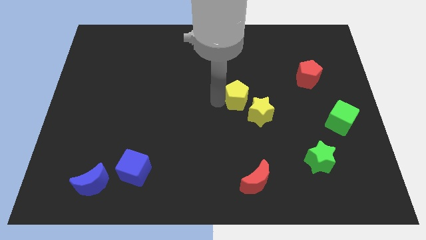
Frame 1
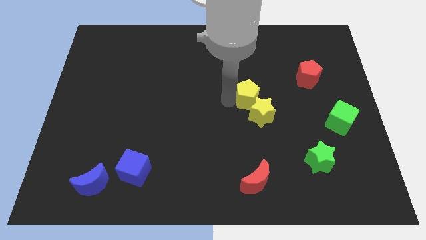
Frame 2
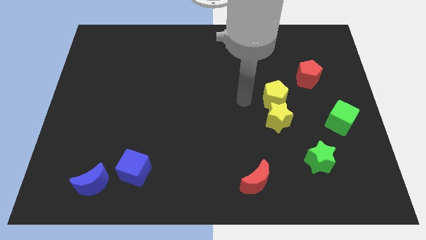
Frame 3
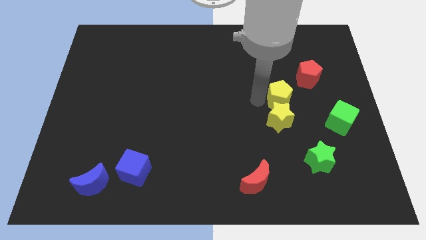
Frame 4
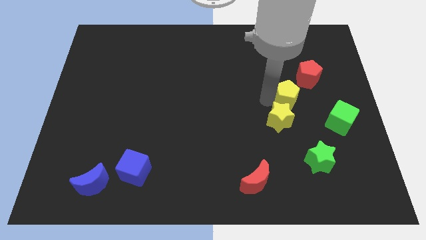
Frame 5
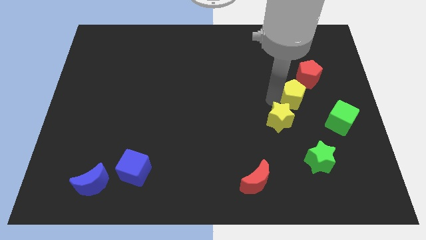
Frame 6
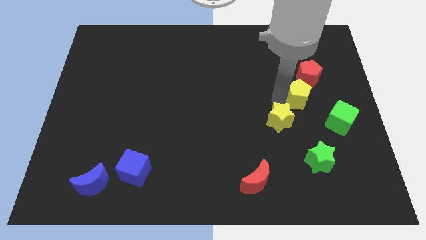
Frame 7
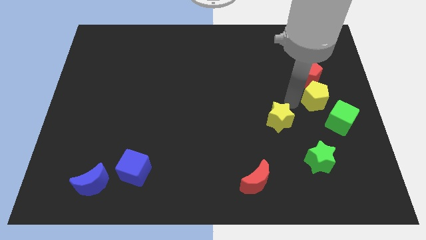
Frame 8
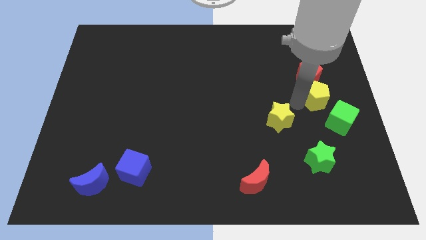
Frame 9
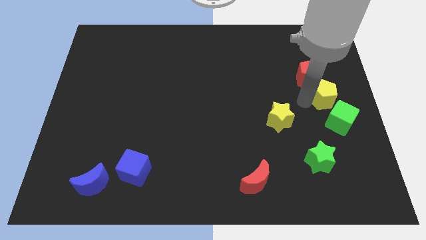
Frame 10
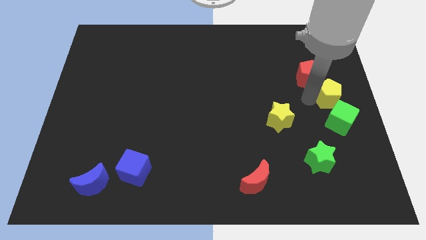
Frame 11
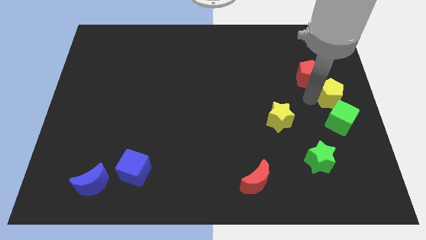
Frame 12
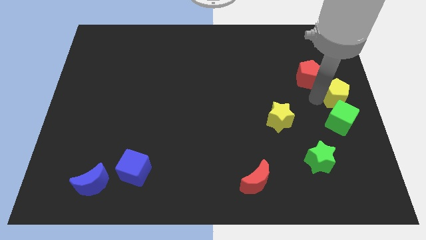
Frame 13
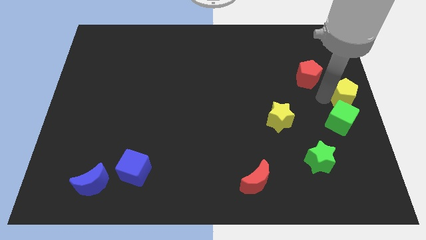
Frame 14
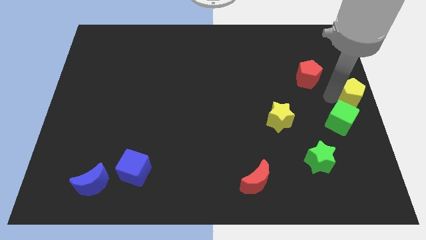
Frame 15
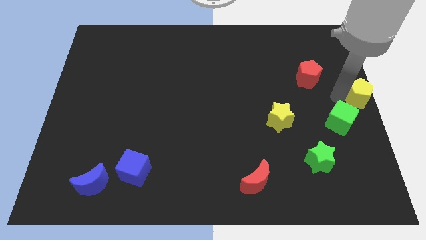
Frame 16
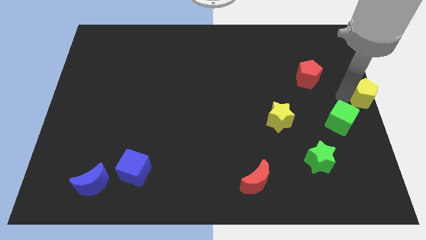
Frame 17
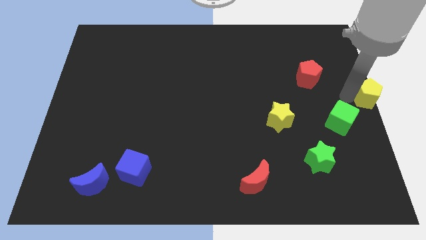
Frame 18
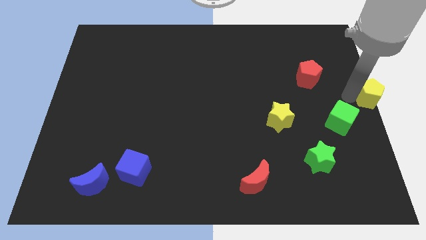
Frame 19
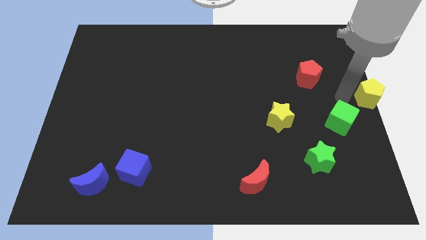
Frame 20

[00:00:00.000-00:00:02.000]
move the yellow pentagon to the top right of the green cube

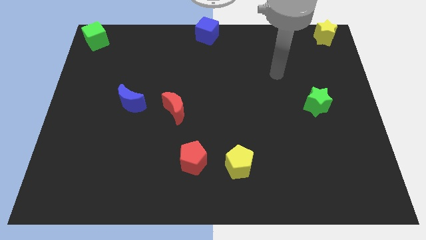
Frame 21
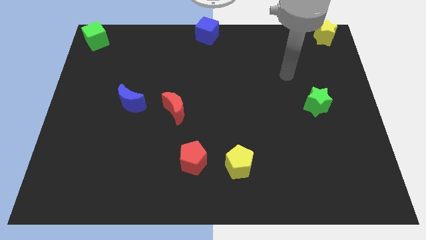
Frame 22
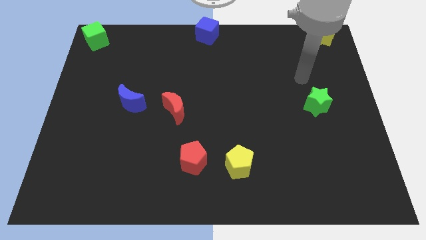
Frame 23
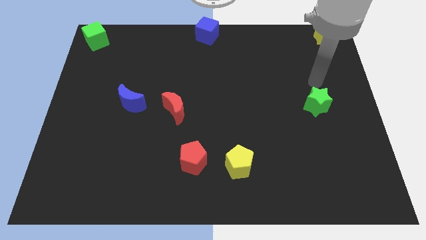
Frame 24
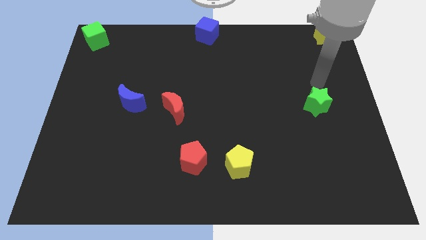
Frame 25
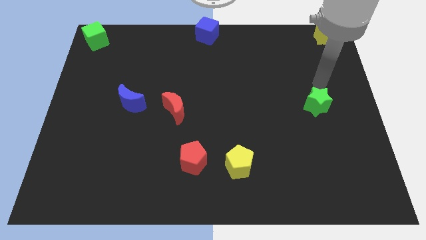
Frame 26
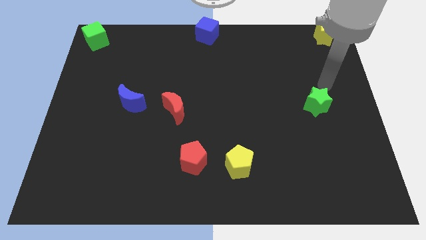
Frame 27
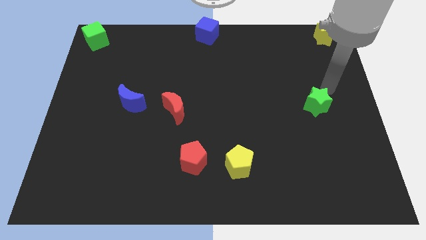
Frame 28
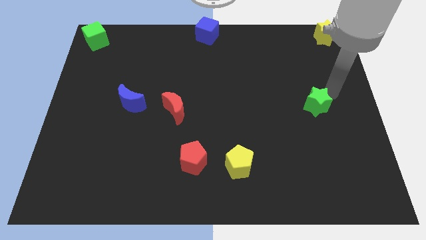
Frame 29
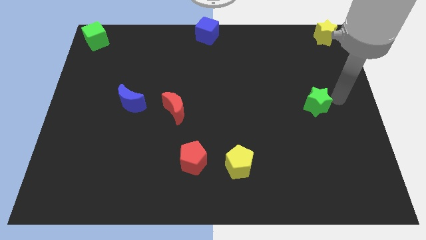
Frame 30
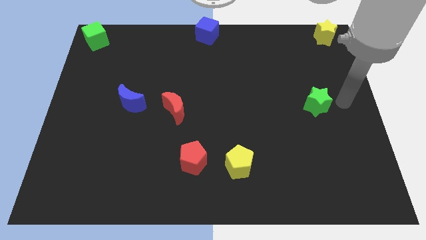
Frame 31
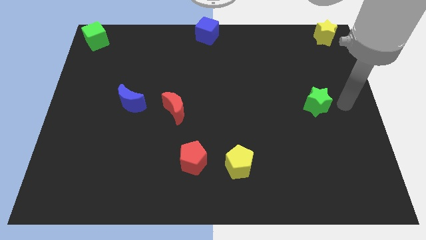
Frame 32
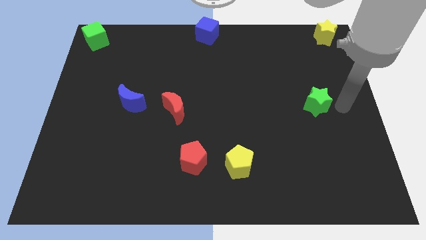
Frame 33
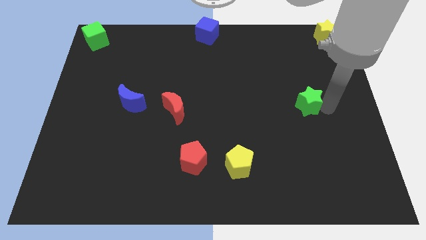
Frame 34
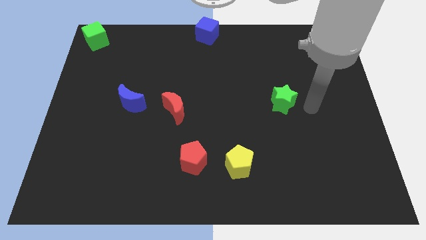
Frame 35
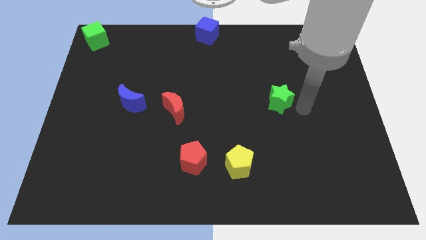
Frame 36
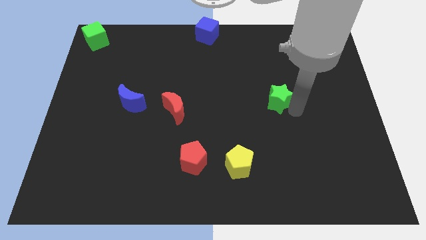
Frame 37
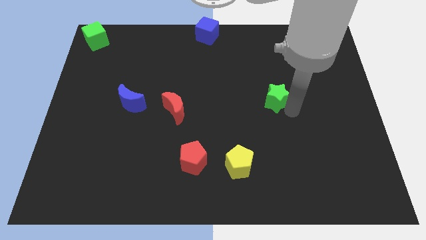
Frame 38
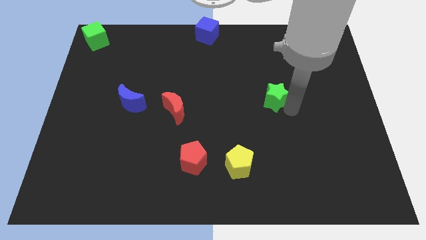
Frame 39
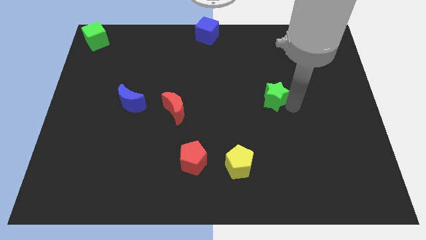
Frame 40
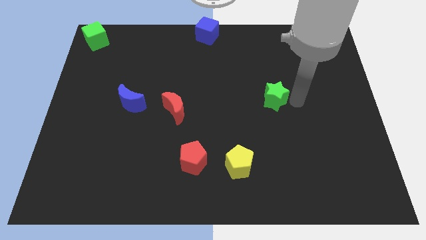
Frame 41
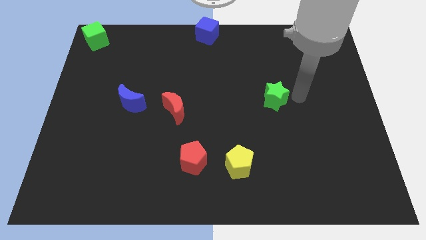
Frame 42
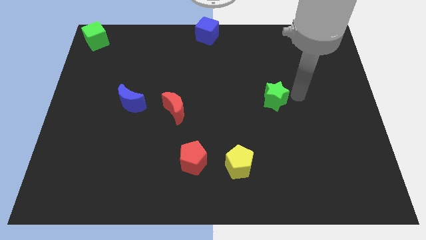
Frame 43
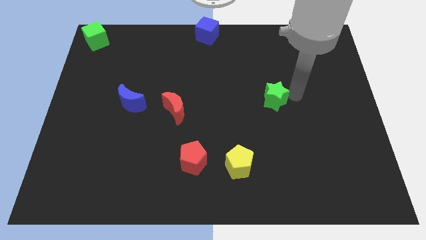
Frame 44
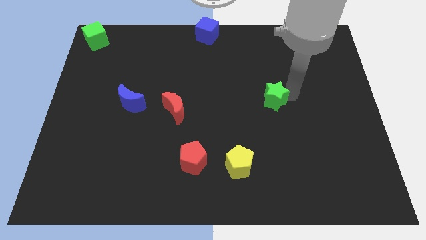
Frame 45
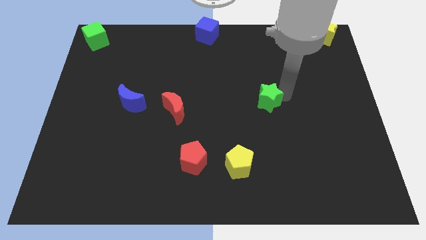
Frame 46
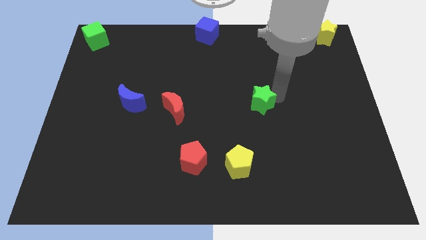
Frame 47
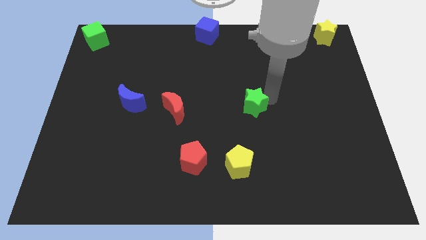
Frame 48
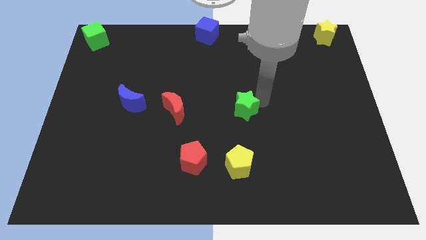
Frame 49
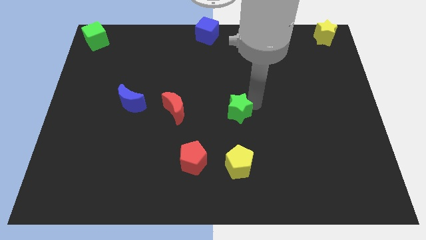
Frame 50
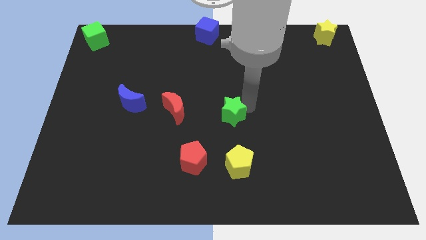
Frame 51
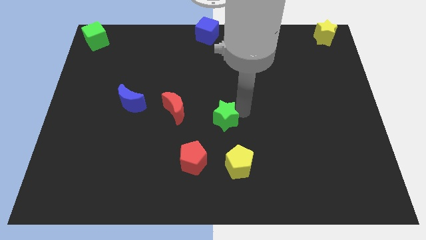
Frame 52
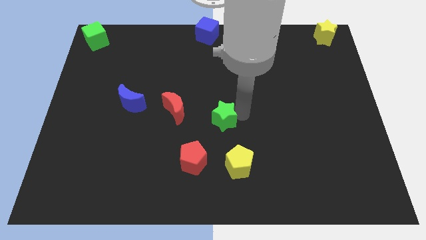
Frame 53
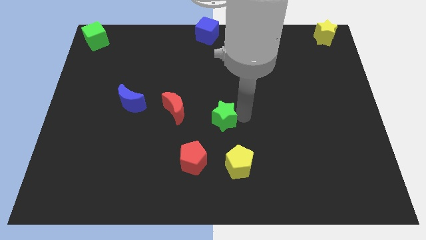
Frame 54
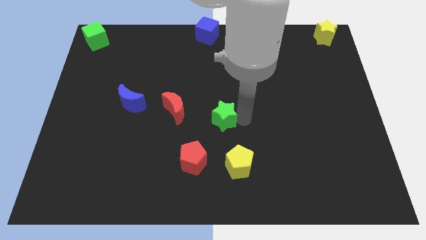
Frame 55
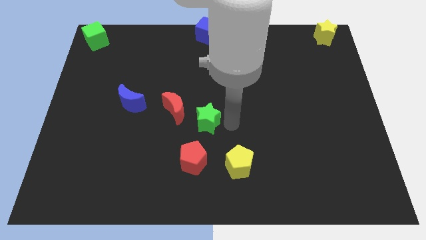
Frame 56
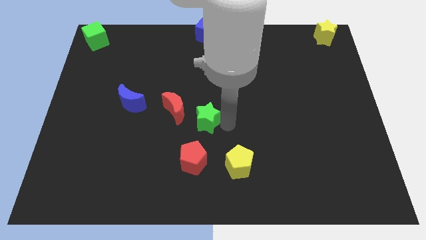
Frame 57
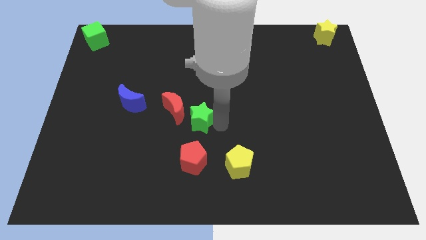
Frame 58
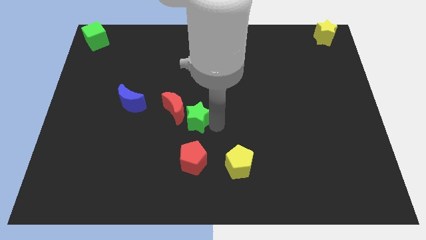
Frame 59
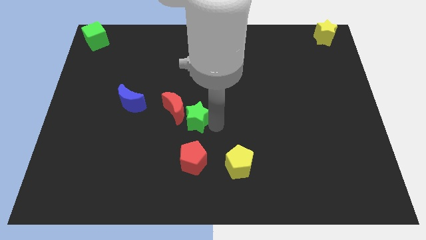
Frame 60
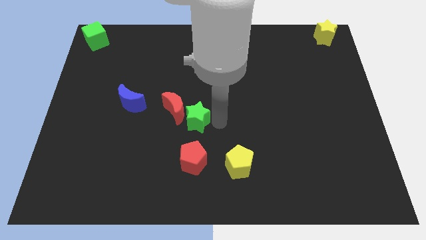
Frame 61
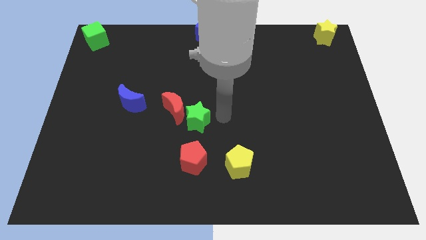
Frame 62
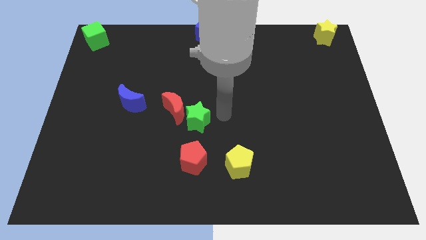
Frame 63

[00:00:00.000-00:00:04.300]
place the green star above the red pentagon

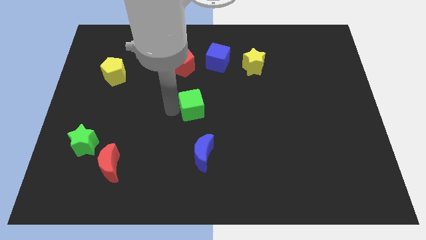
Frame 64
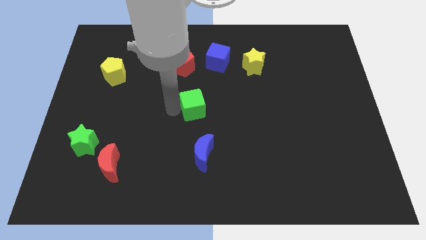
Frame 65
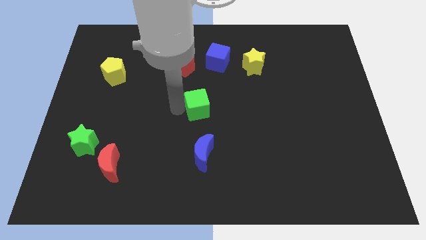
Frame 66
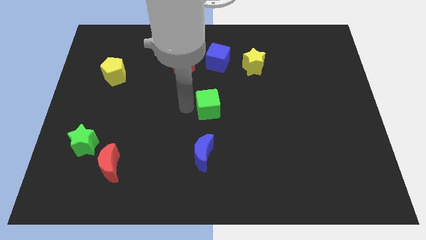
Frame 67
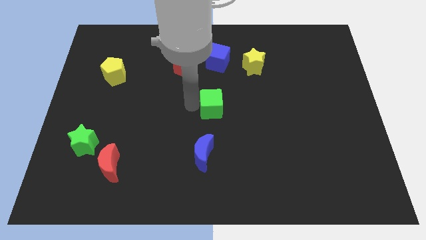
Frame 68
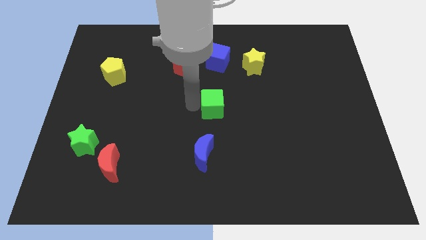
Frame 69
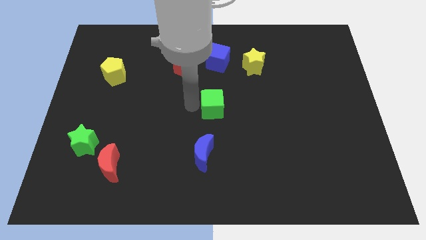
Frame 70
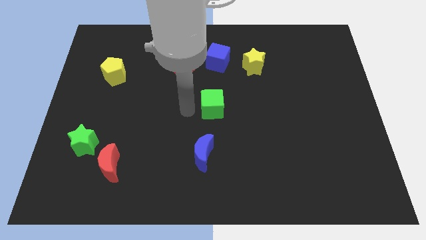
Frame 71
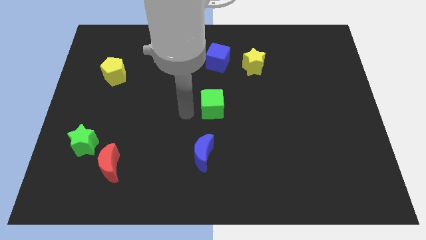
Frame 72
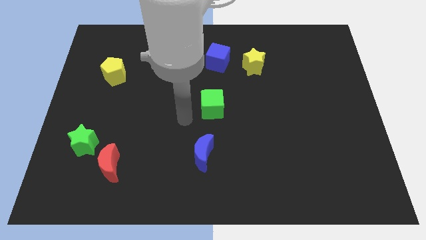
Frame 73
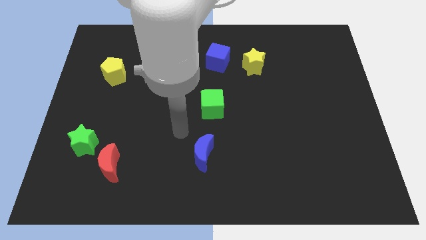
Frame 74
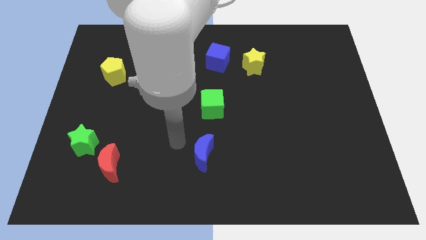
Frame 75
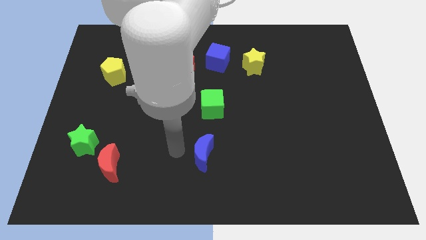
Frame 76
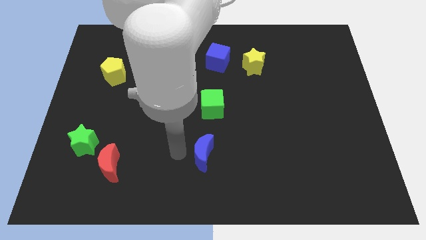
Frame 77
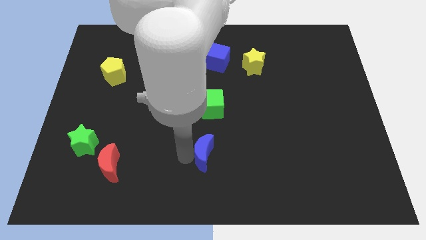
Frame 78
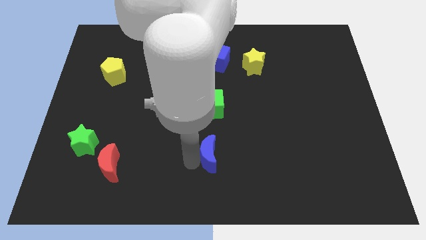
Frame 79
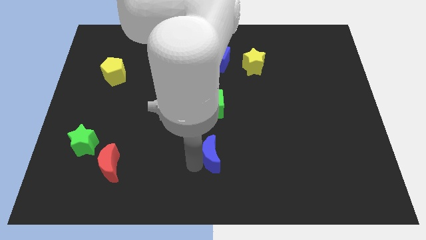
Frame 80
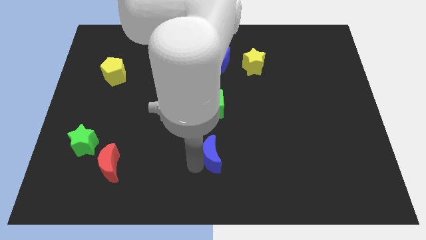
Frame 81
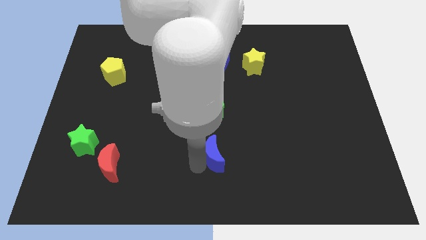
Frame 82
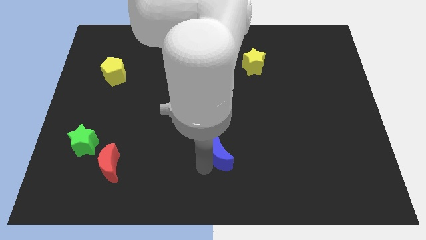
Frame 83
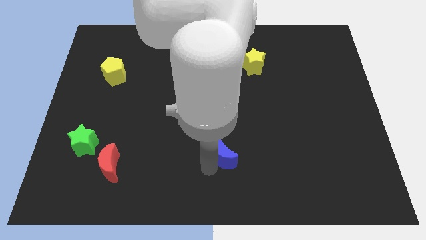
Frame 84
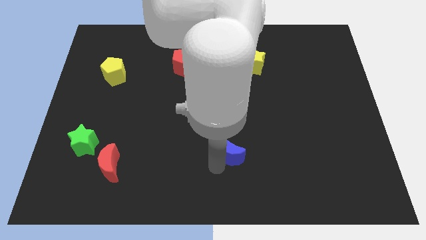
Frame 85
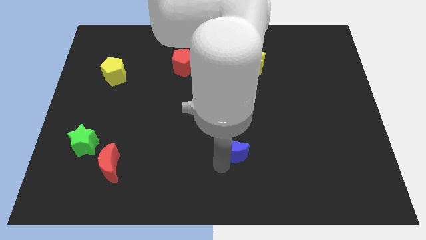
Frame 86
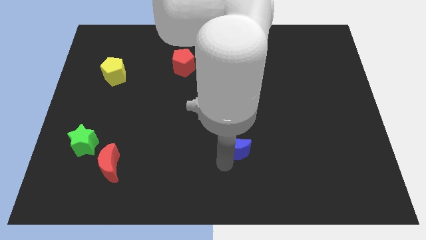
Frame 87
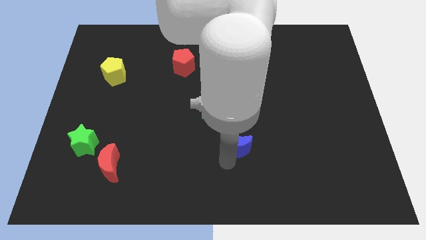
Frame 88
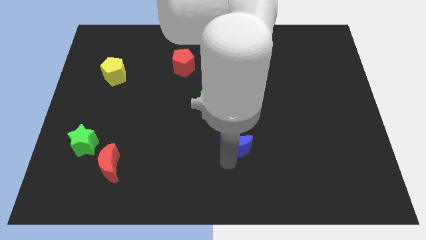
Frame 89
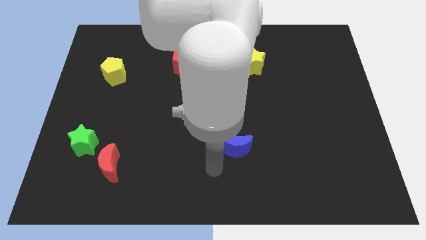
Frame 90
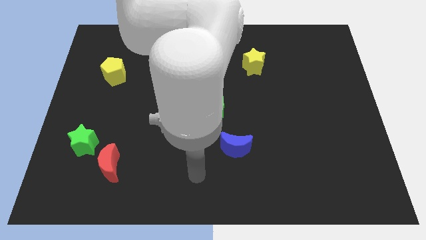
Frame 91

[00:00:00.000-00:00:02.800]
move the green cube and blue moon towards the right side
